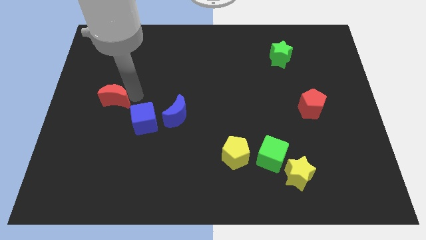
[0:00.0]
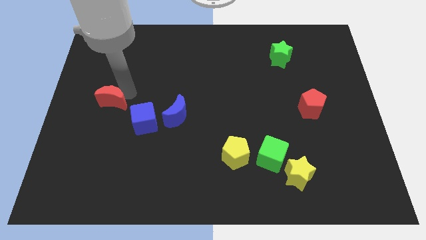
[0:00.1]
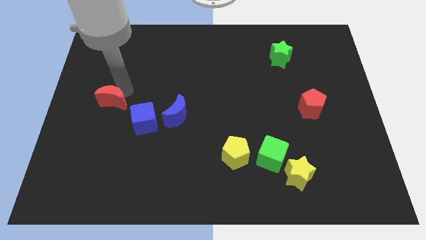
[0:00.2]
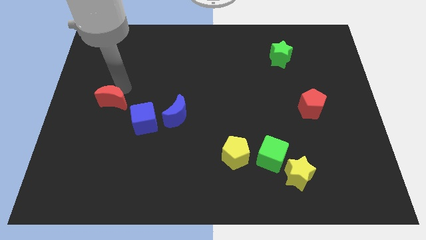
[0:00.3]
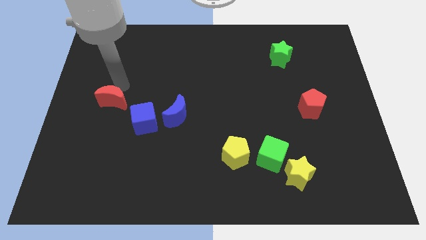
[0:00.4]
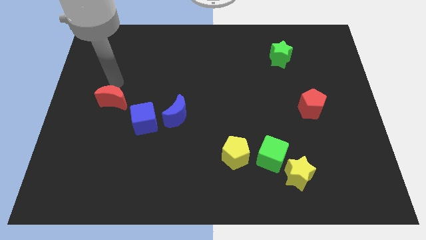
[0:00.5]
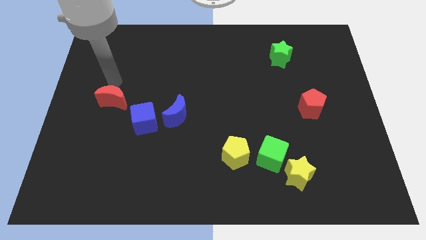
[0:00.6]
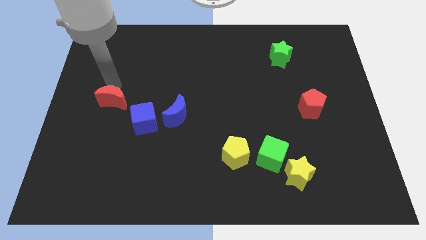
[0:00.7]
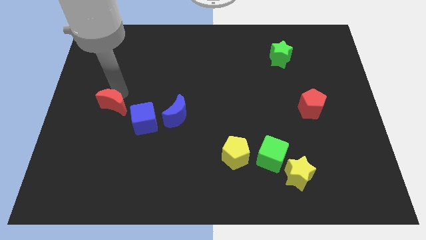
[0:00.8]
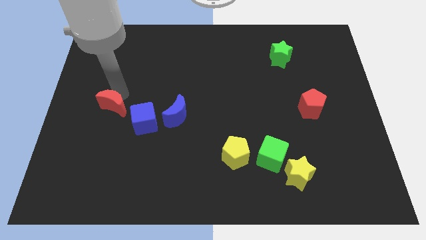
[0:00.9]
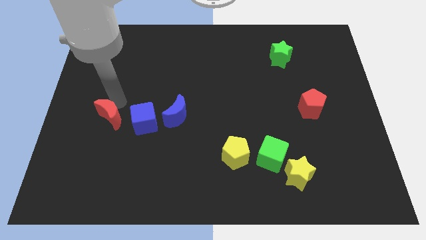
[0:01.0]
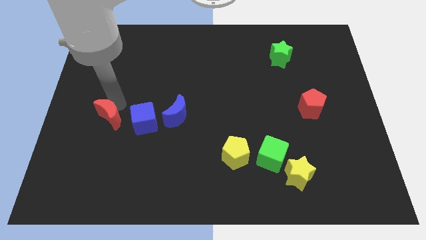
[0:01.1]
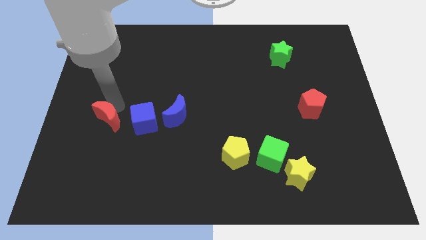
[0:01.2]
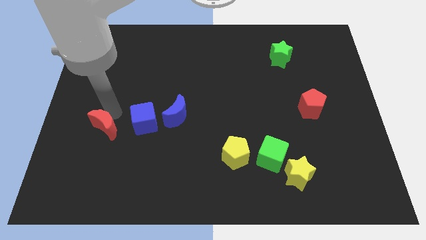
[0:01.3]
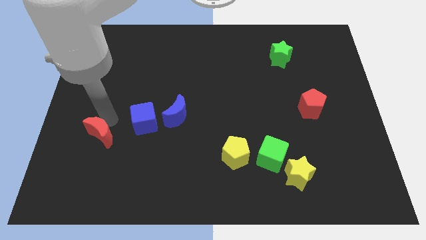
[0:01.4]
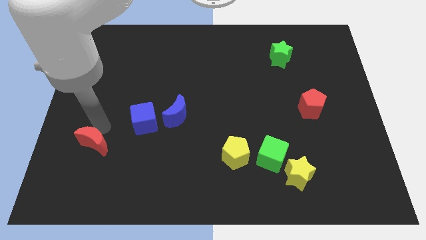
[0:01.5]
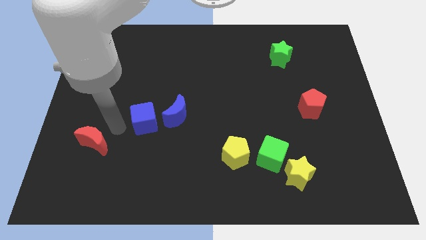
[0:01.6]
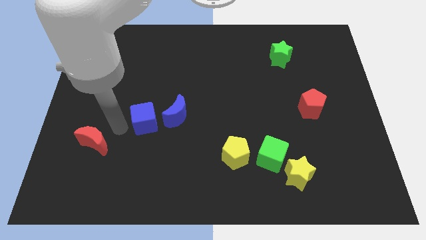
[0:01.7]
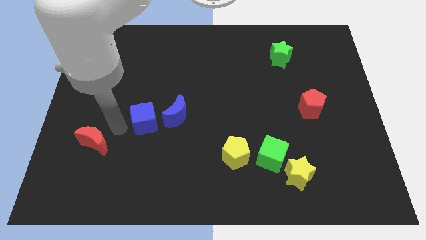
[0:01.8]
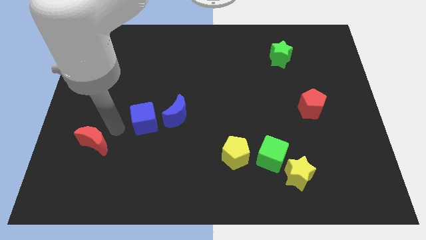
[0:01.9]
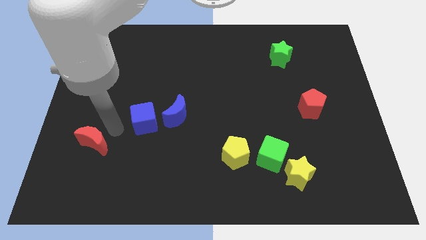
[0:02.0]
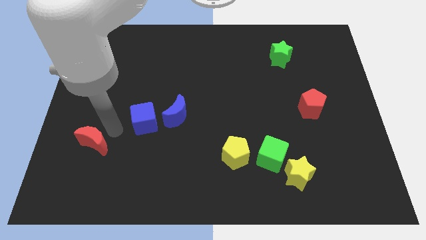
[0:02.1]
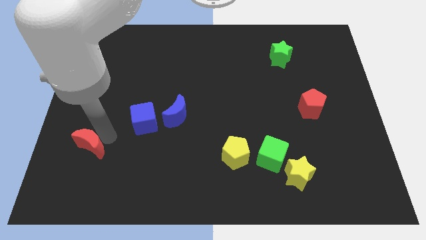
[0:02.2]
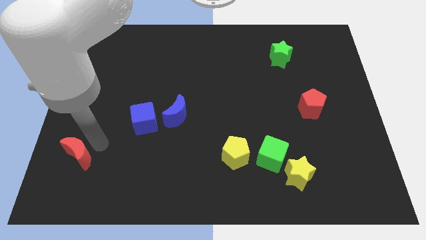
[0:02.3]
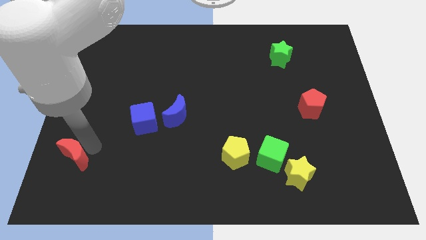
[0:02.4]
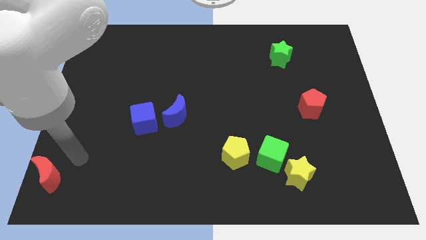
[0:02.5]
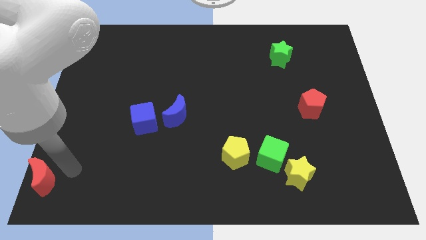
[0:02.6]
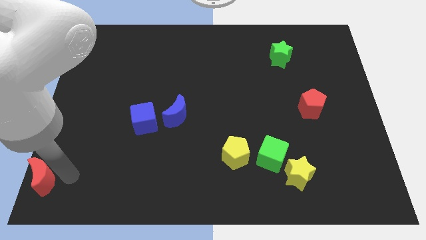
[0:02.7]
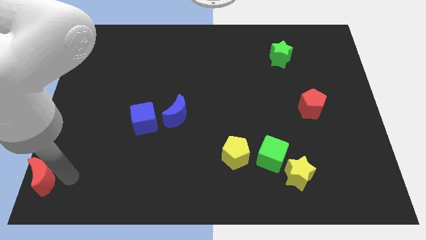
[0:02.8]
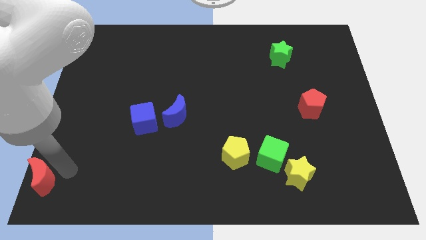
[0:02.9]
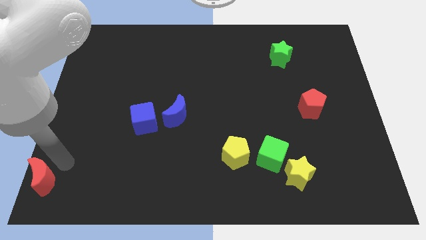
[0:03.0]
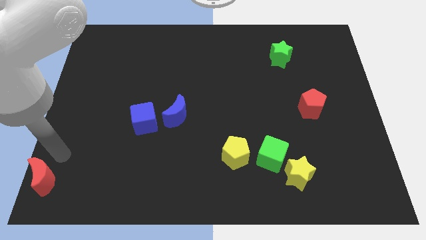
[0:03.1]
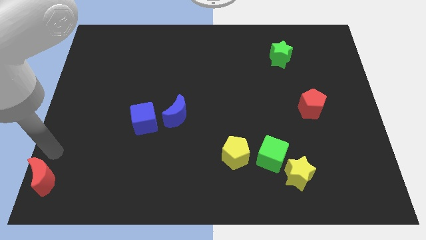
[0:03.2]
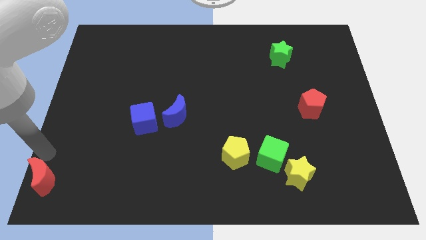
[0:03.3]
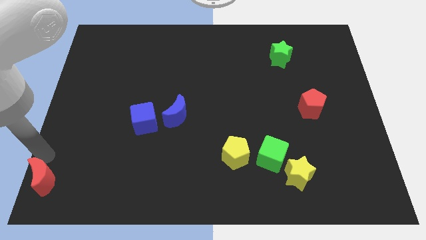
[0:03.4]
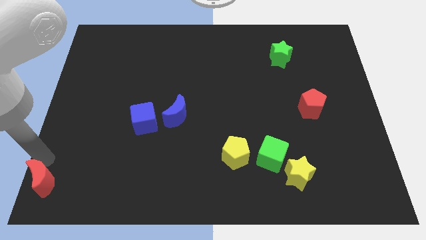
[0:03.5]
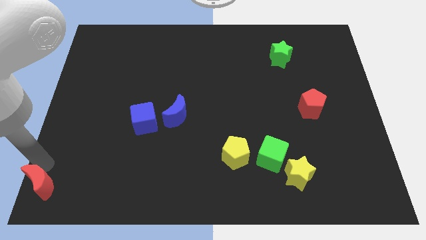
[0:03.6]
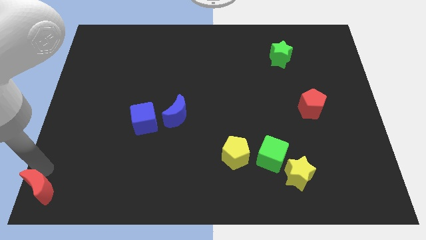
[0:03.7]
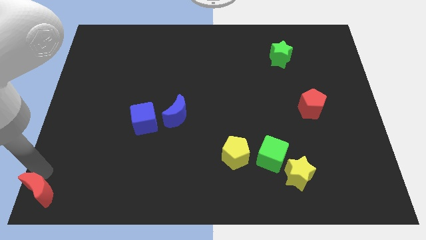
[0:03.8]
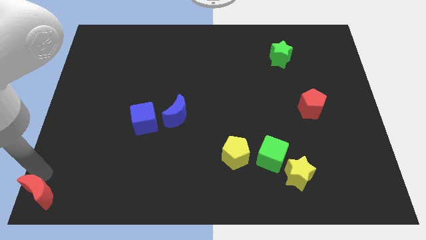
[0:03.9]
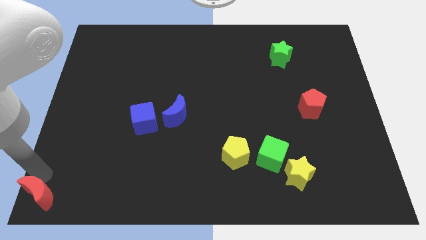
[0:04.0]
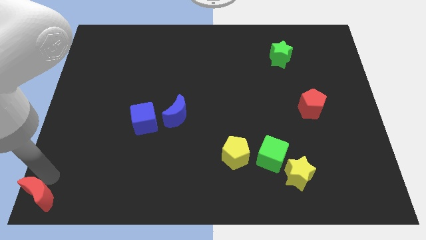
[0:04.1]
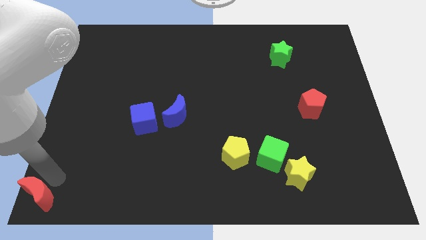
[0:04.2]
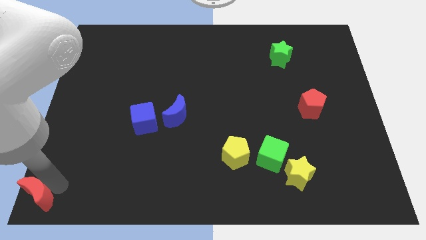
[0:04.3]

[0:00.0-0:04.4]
place the red crescent at the bottom left corner of the board

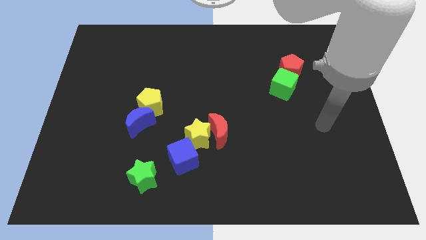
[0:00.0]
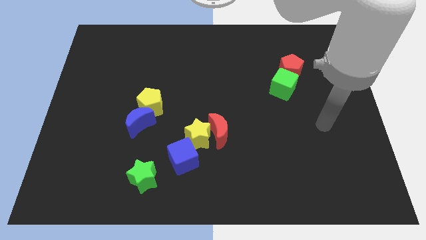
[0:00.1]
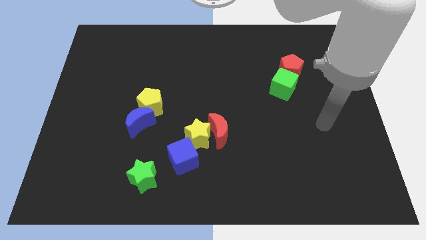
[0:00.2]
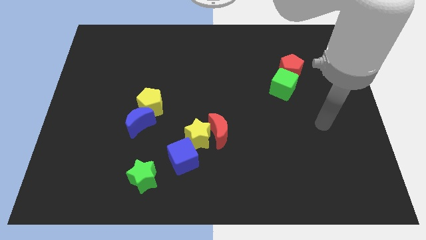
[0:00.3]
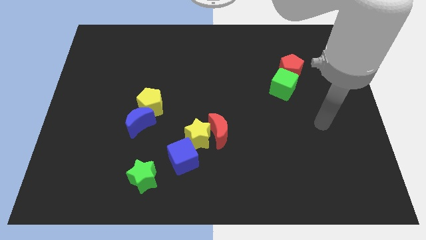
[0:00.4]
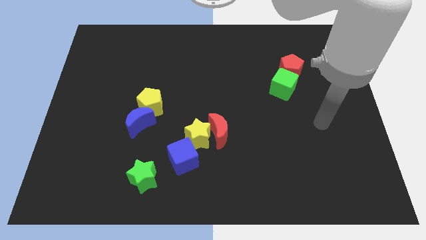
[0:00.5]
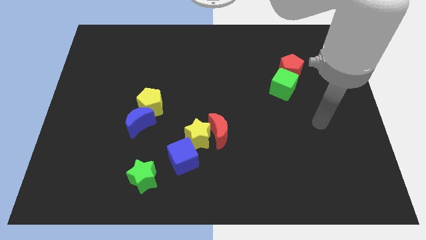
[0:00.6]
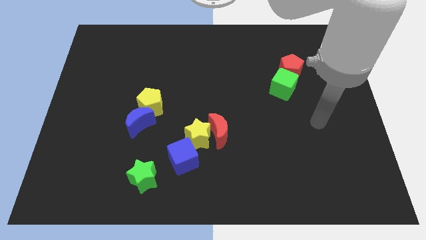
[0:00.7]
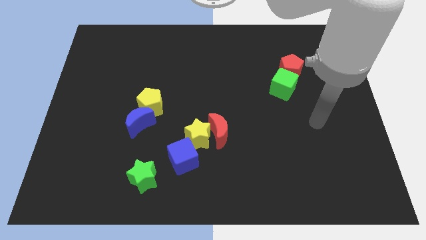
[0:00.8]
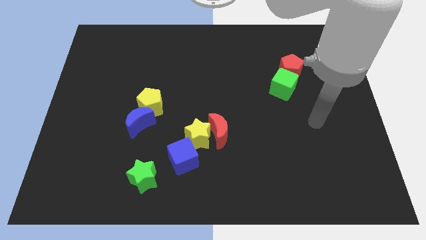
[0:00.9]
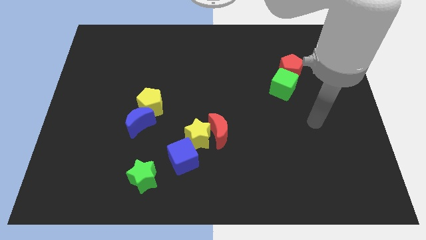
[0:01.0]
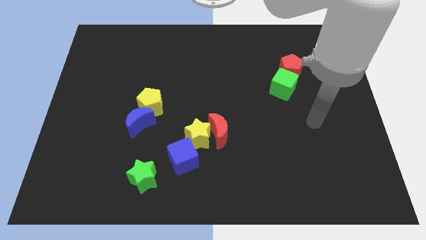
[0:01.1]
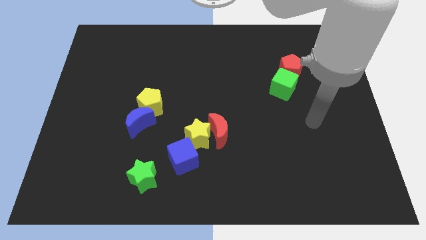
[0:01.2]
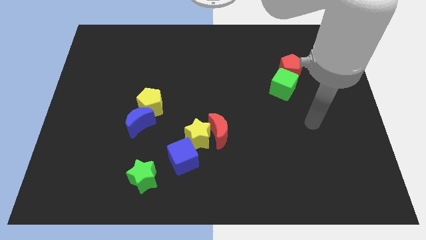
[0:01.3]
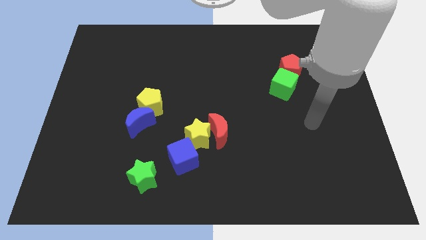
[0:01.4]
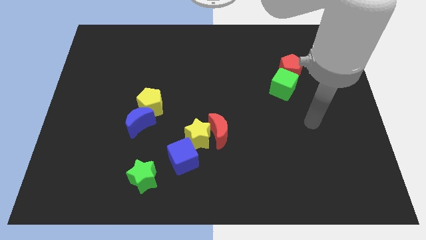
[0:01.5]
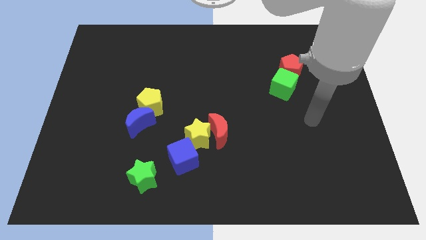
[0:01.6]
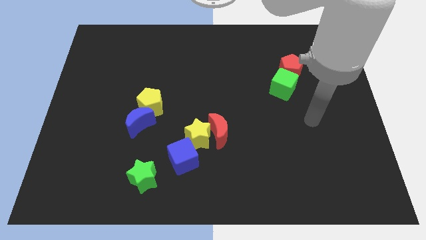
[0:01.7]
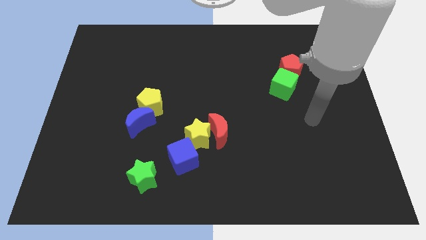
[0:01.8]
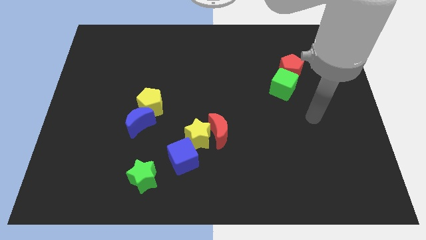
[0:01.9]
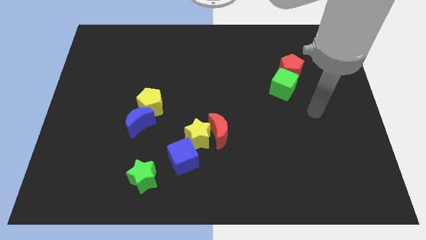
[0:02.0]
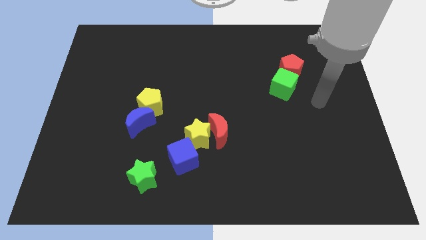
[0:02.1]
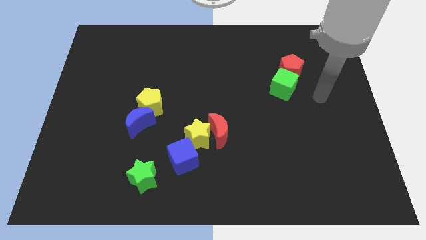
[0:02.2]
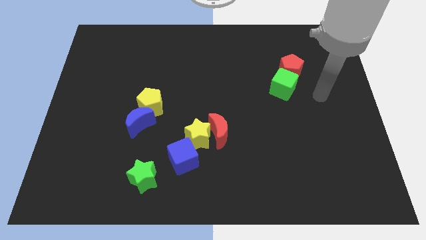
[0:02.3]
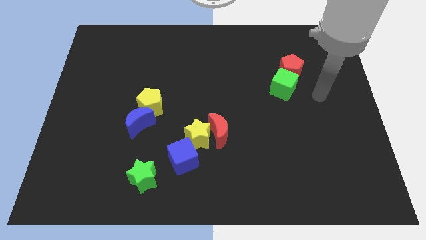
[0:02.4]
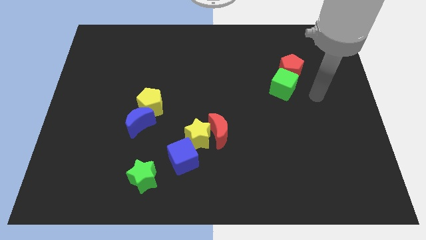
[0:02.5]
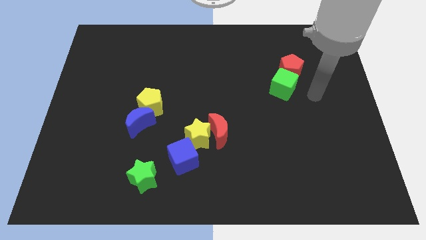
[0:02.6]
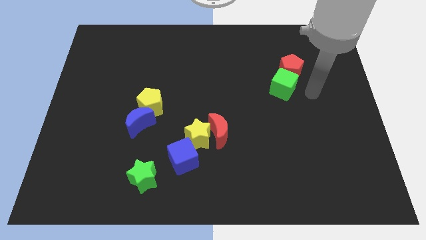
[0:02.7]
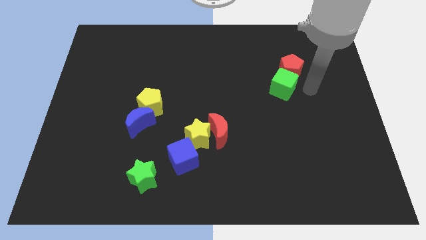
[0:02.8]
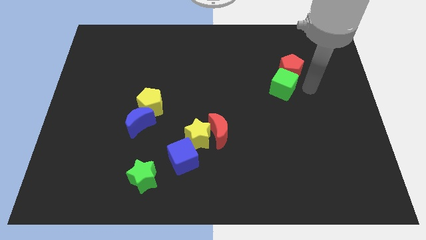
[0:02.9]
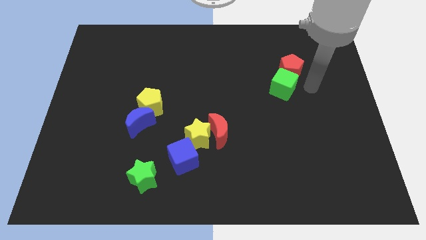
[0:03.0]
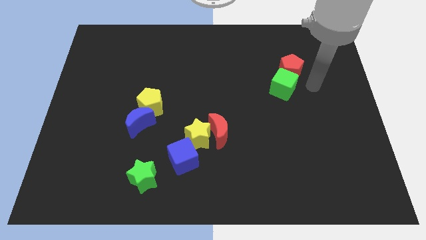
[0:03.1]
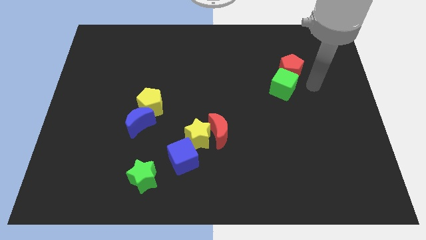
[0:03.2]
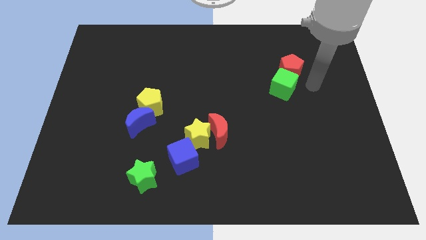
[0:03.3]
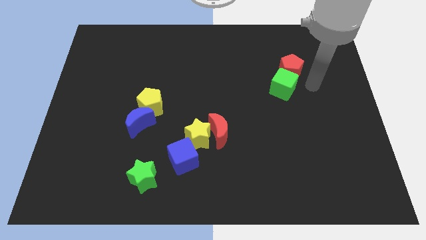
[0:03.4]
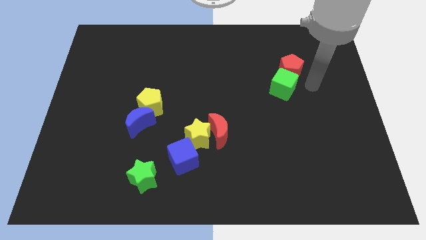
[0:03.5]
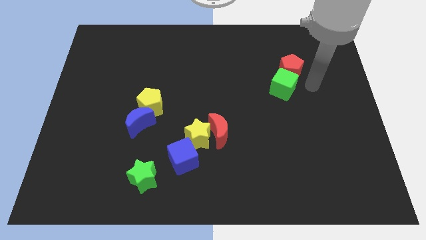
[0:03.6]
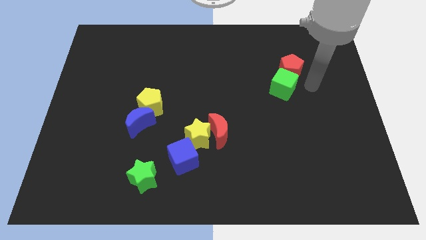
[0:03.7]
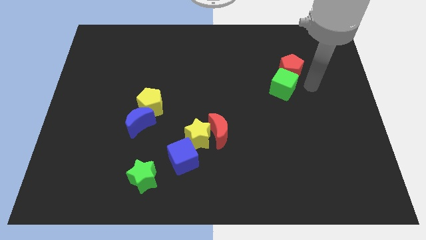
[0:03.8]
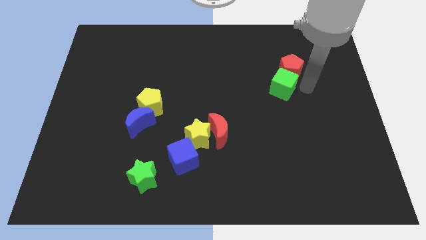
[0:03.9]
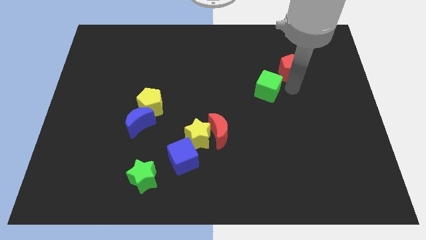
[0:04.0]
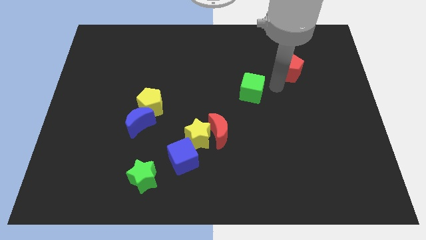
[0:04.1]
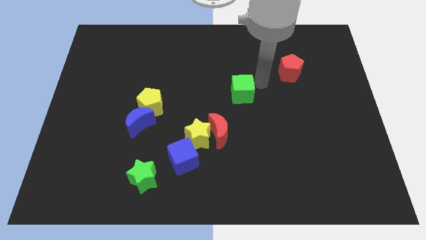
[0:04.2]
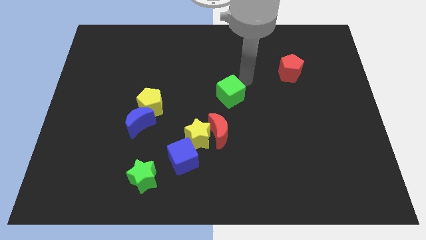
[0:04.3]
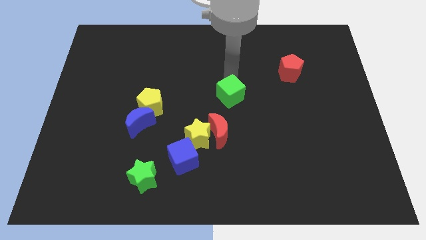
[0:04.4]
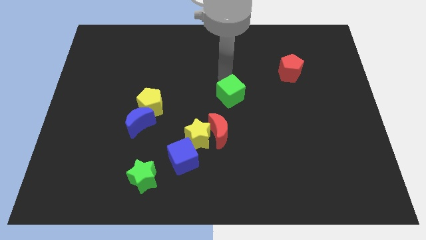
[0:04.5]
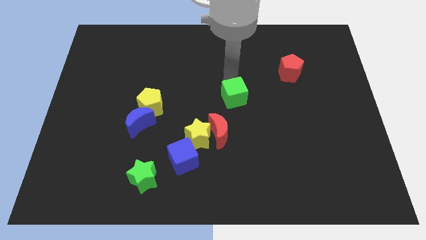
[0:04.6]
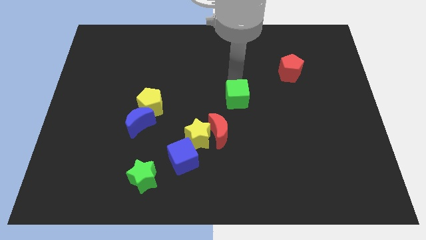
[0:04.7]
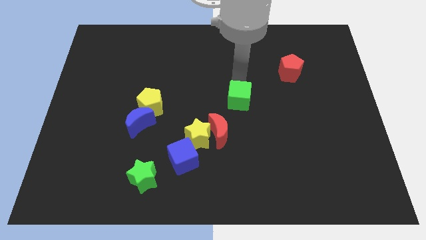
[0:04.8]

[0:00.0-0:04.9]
place the green cube diagonally bottom left to the red pentagon
